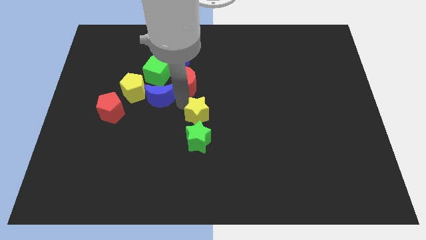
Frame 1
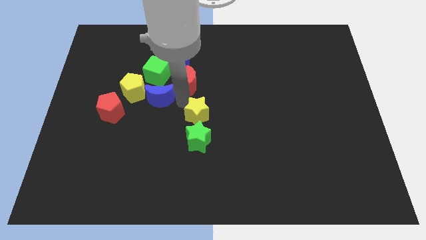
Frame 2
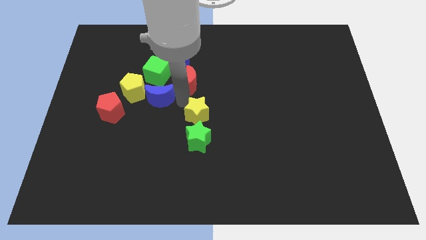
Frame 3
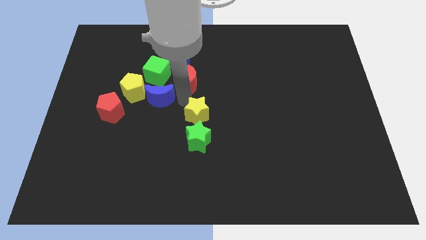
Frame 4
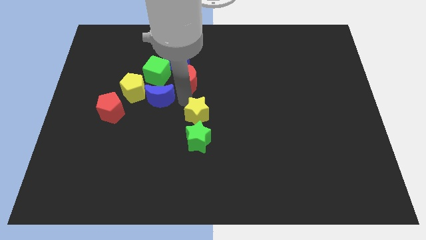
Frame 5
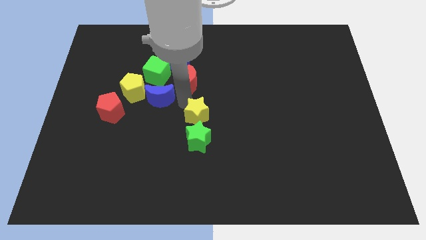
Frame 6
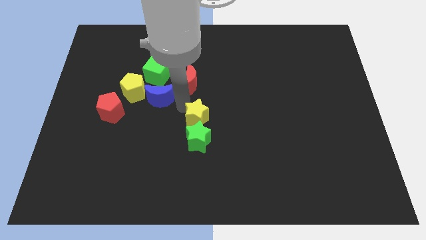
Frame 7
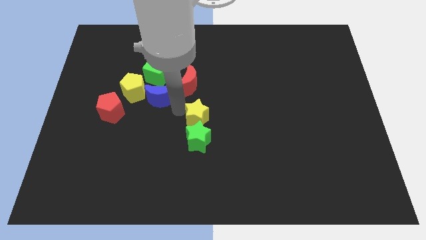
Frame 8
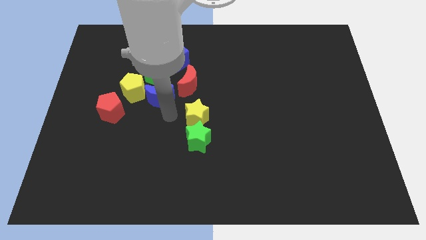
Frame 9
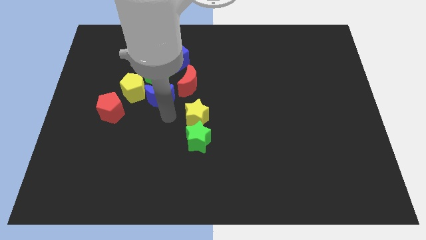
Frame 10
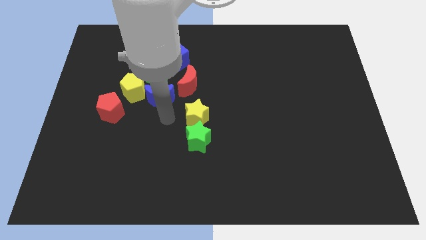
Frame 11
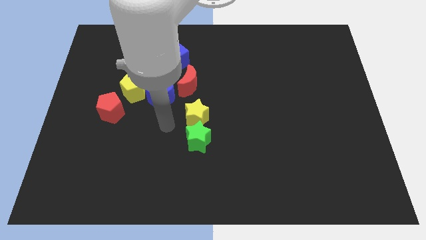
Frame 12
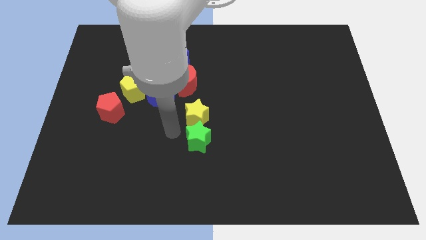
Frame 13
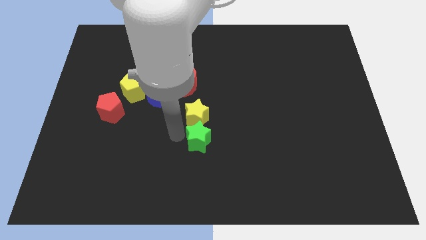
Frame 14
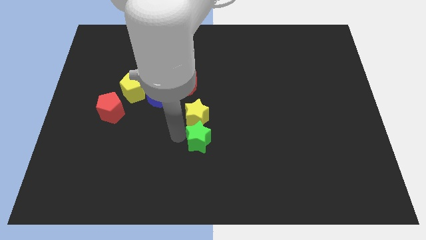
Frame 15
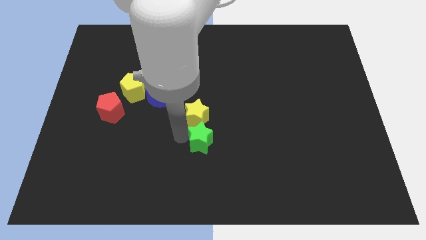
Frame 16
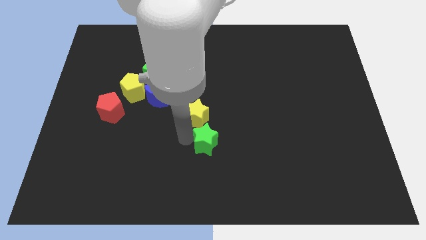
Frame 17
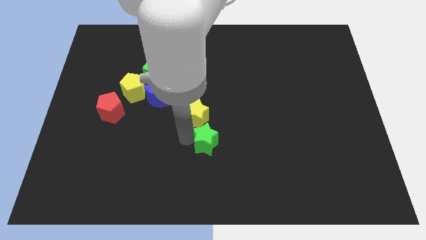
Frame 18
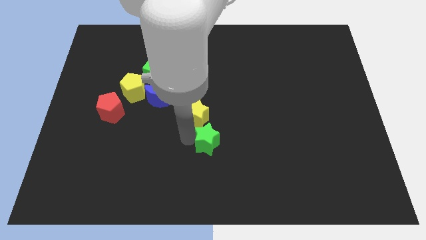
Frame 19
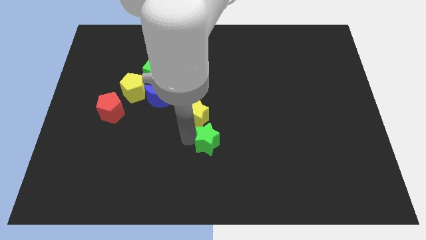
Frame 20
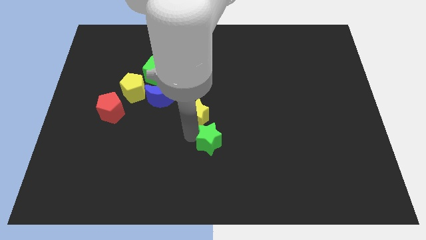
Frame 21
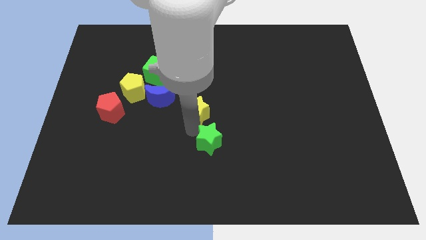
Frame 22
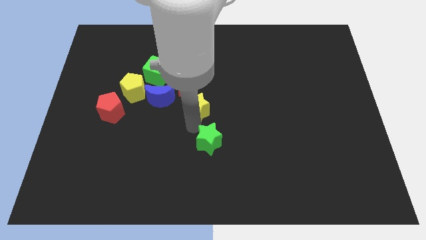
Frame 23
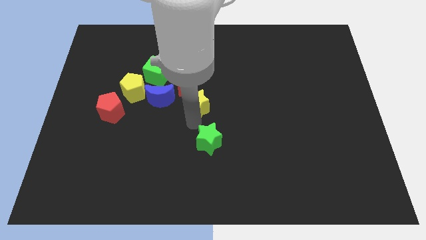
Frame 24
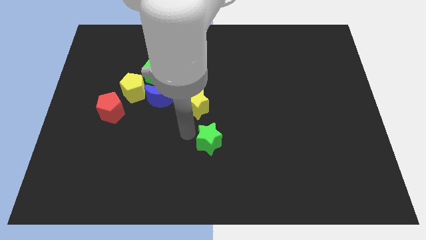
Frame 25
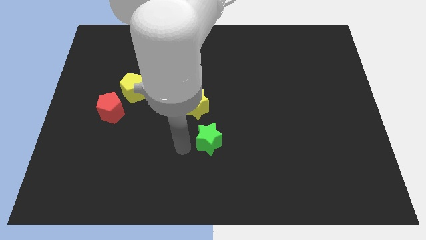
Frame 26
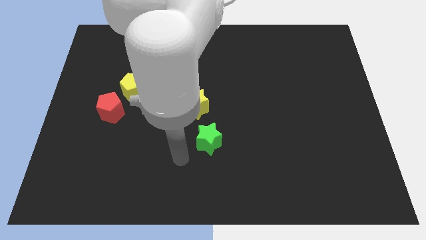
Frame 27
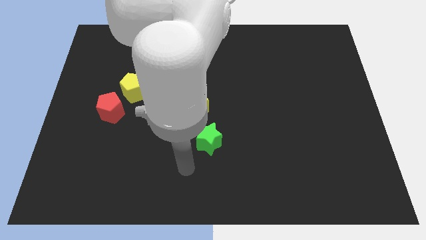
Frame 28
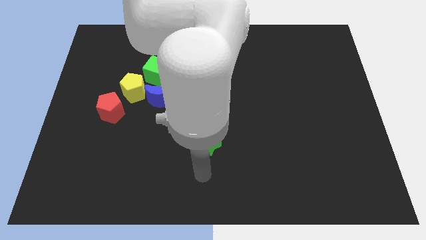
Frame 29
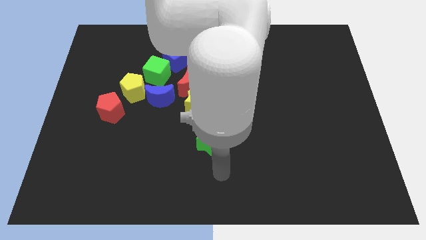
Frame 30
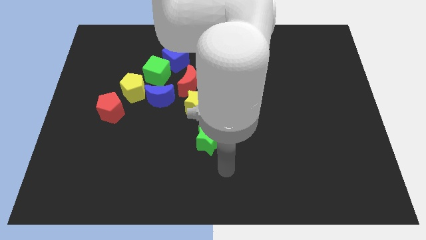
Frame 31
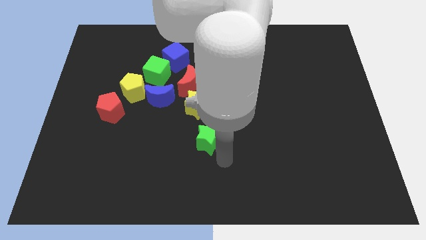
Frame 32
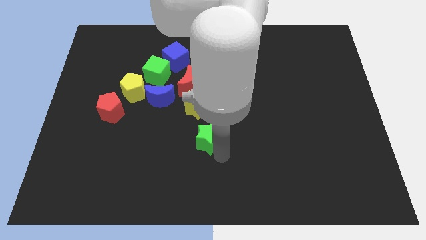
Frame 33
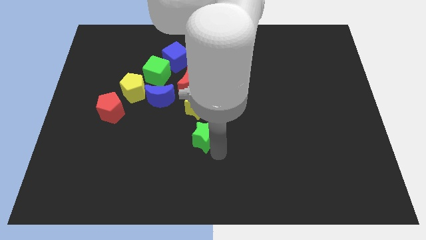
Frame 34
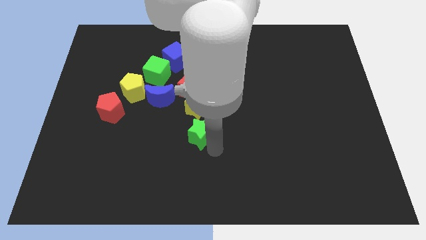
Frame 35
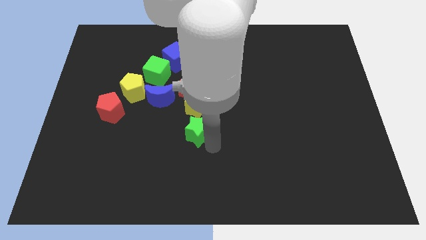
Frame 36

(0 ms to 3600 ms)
separate yellow star and green star

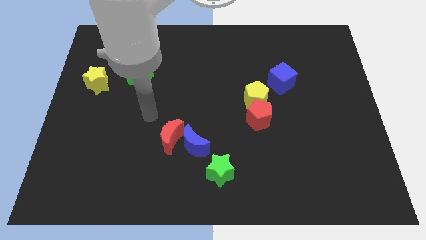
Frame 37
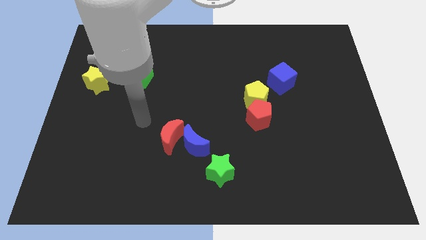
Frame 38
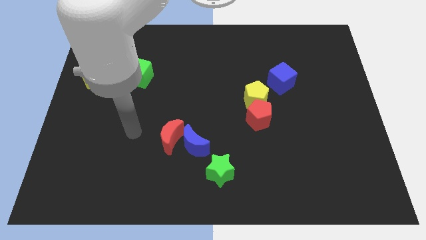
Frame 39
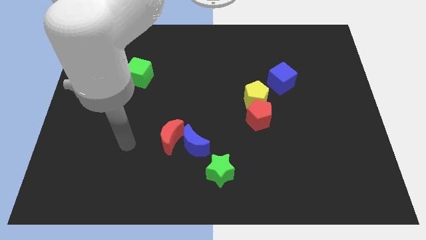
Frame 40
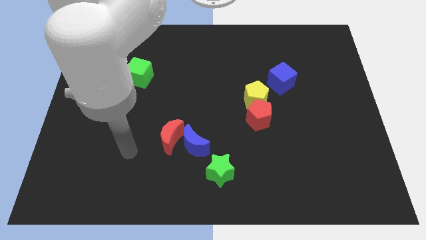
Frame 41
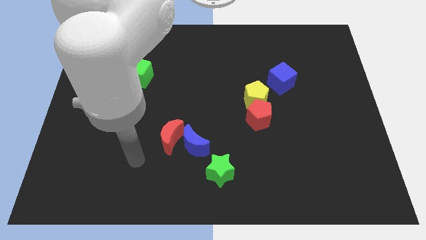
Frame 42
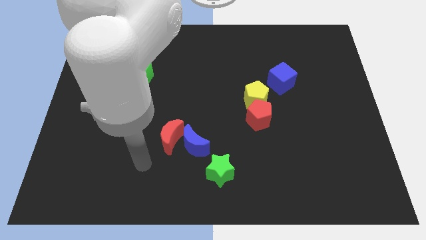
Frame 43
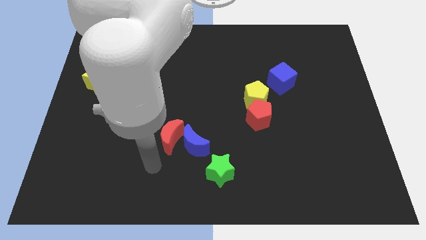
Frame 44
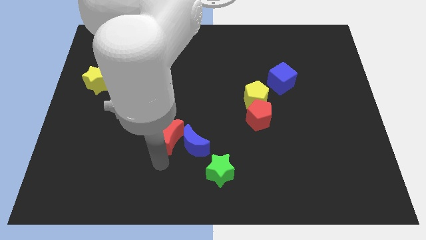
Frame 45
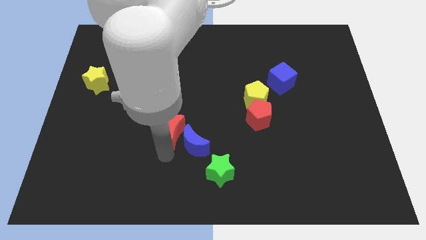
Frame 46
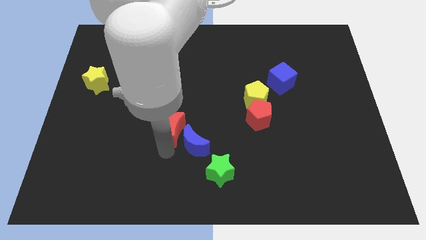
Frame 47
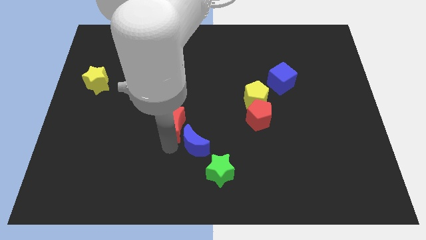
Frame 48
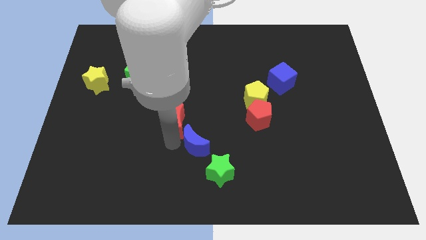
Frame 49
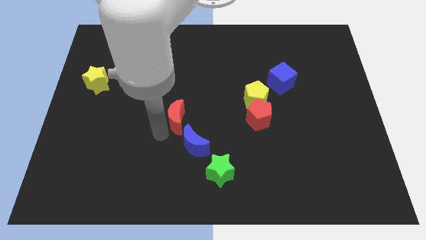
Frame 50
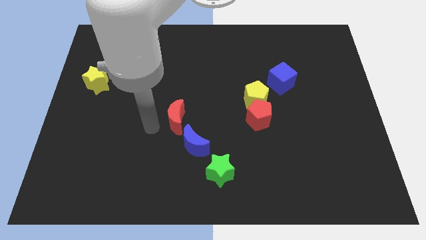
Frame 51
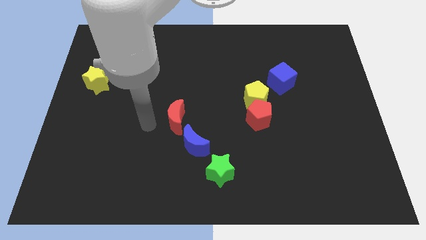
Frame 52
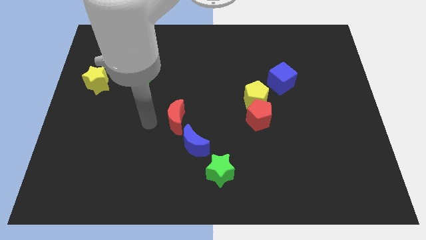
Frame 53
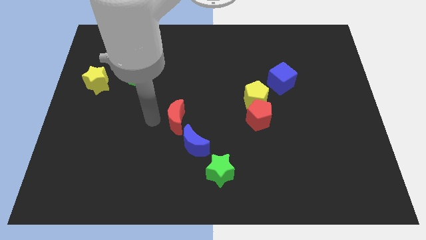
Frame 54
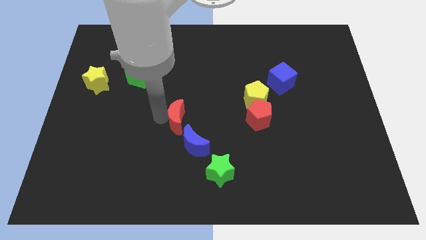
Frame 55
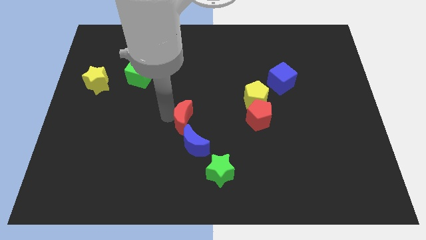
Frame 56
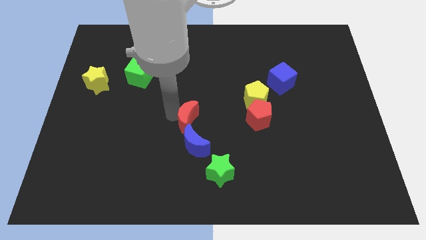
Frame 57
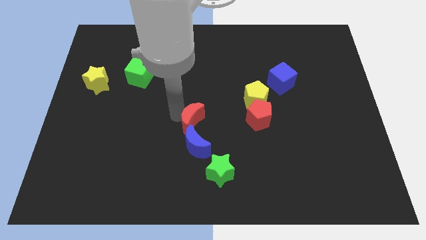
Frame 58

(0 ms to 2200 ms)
push the red crescent to top of the blue cescent

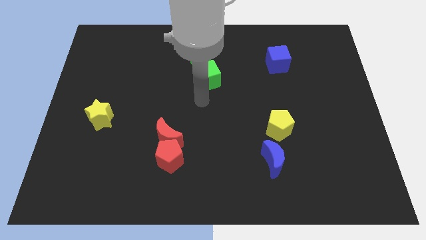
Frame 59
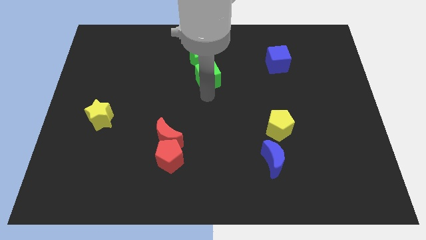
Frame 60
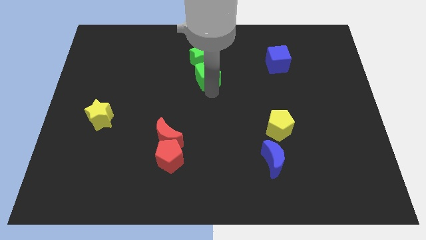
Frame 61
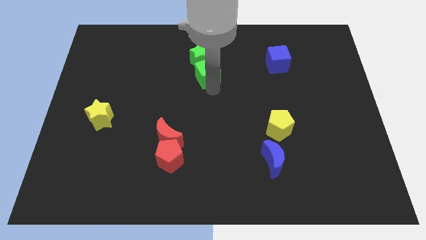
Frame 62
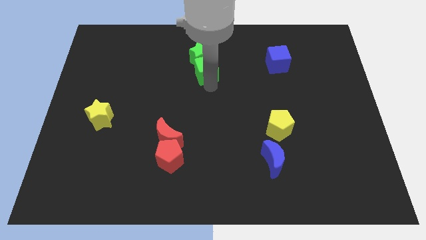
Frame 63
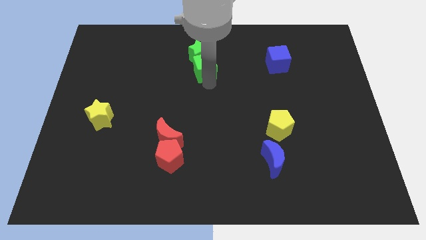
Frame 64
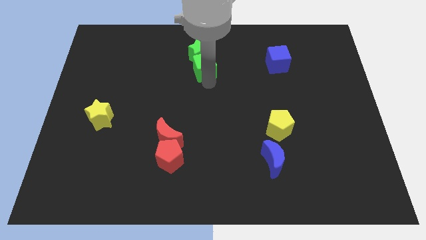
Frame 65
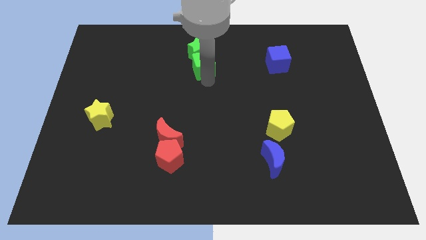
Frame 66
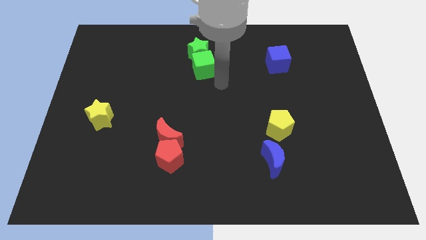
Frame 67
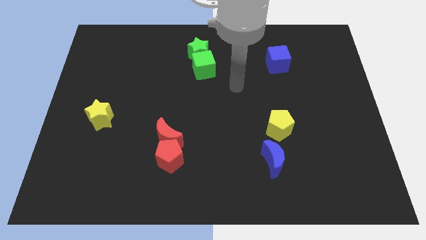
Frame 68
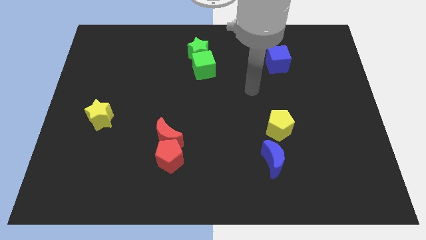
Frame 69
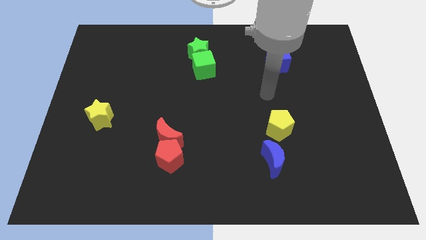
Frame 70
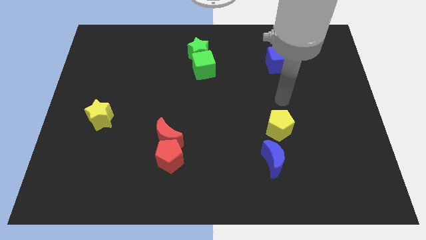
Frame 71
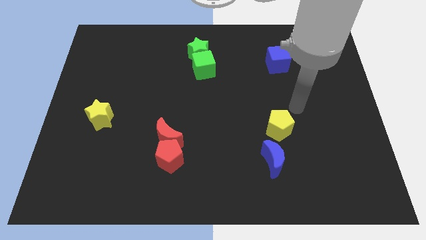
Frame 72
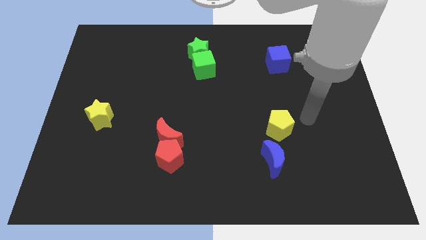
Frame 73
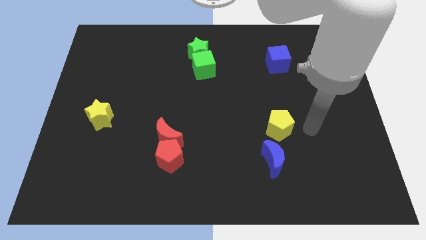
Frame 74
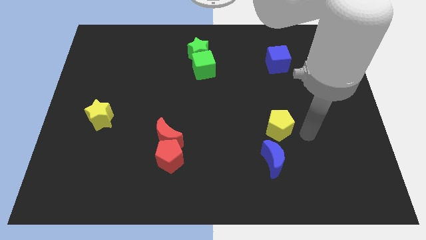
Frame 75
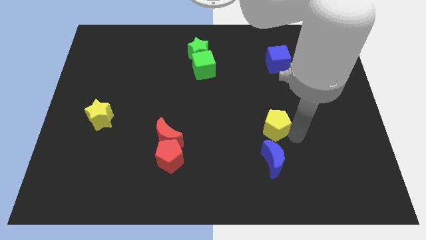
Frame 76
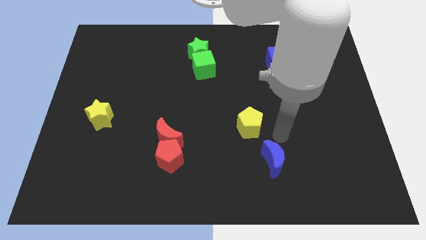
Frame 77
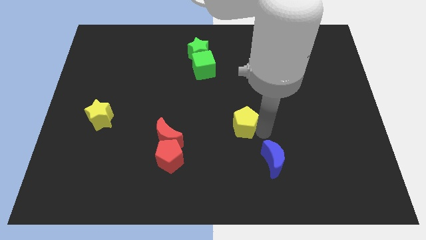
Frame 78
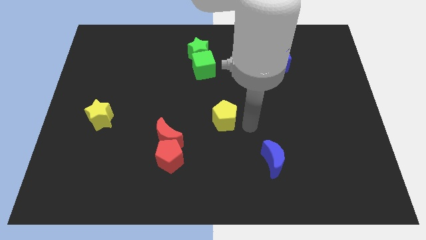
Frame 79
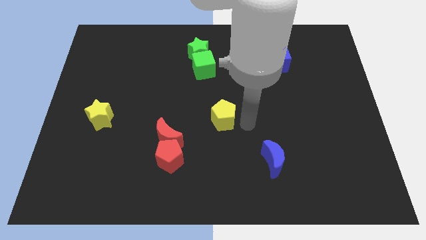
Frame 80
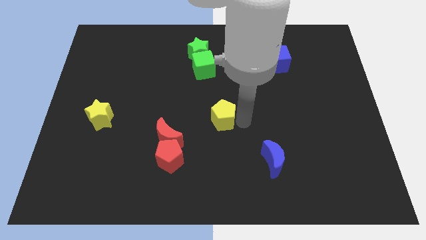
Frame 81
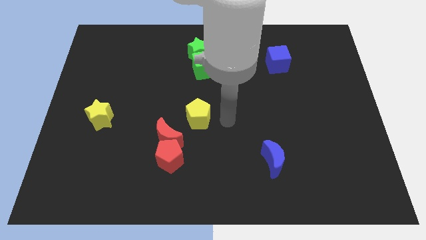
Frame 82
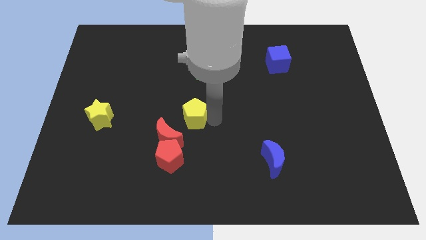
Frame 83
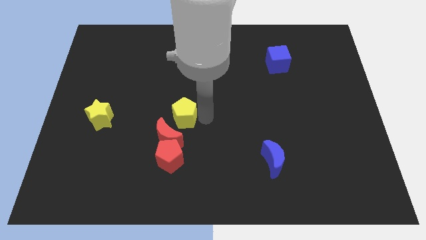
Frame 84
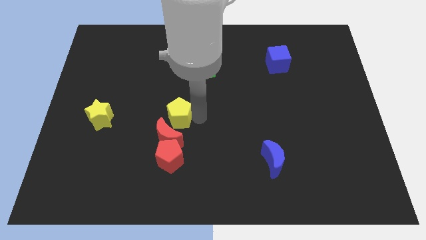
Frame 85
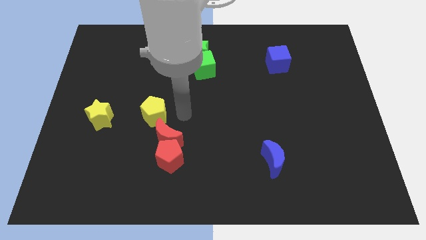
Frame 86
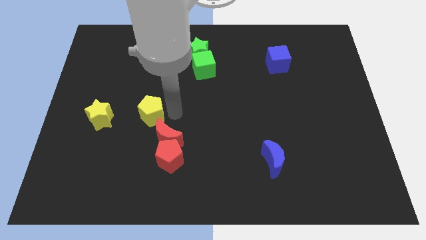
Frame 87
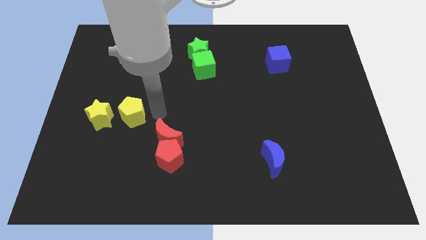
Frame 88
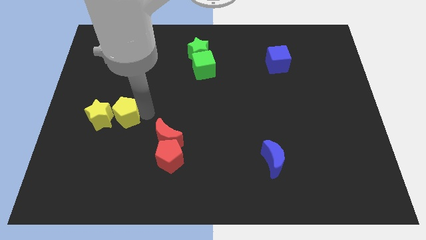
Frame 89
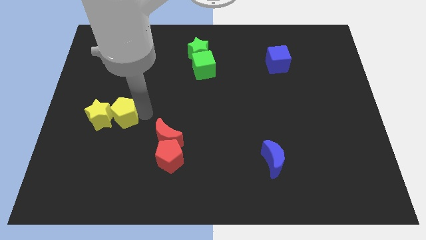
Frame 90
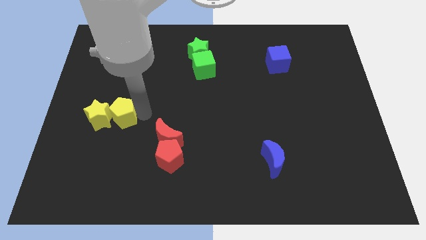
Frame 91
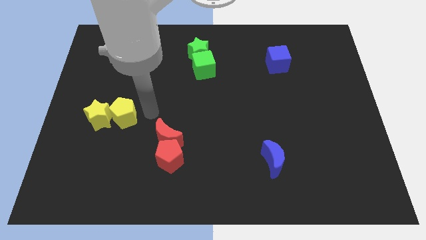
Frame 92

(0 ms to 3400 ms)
push the green star using green cube while placing the yellow pentagon right to the yellow star

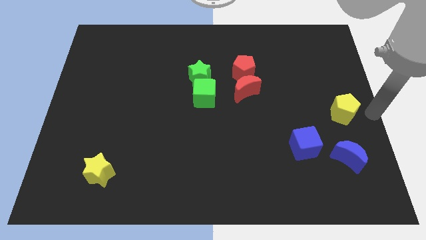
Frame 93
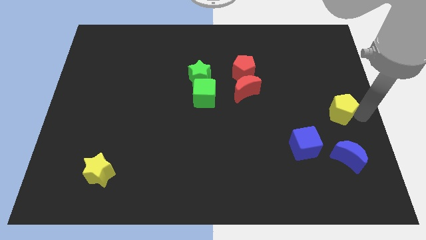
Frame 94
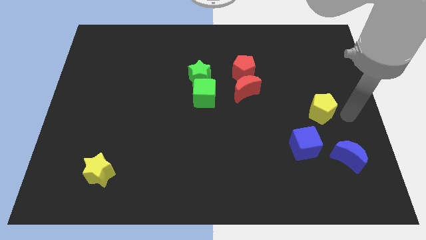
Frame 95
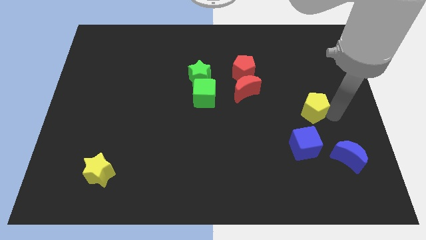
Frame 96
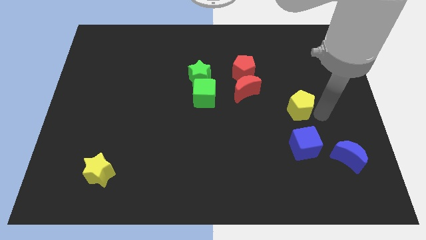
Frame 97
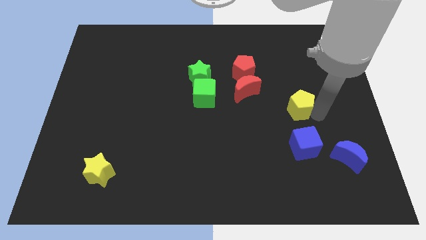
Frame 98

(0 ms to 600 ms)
place the yellow pentagon above the blue cube
